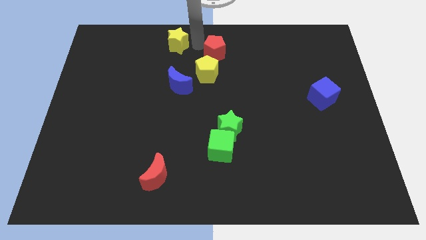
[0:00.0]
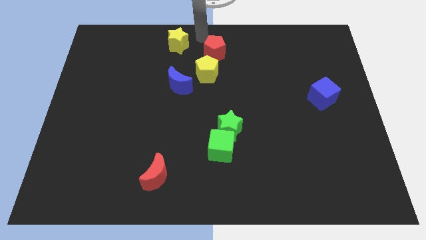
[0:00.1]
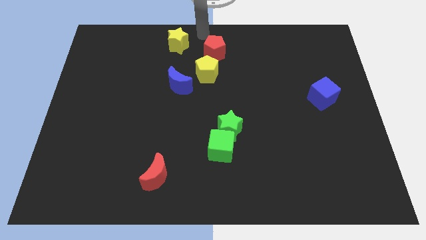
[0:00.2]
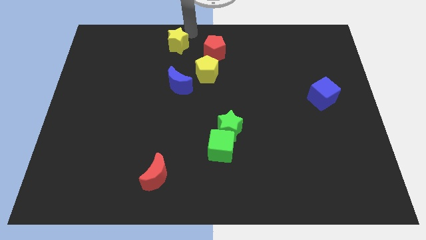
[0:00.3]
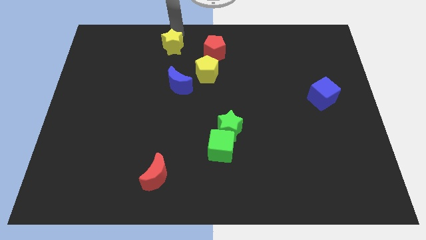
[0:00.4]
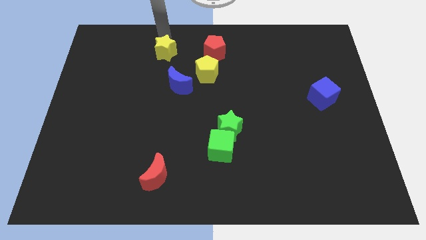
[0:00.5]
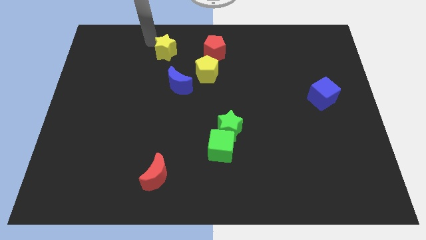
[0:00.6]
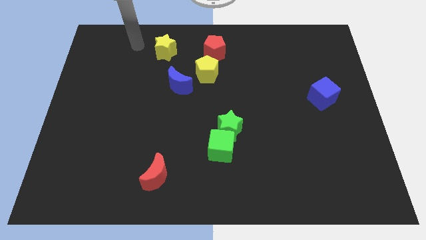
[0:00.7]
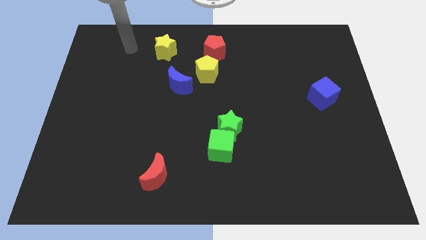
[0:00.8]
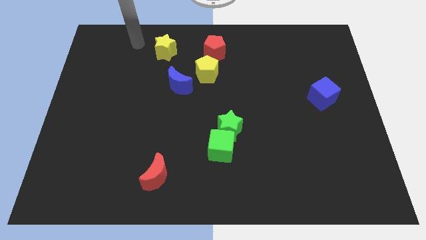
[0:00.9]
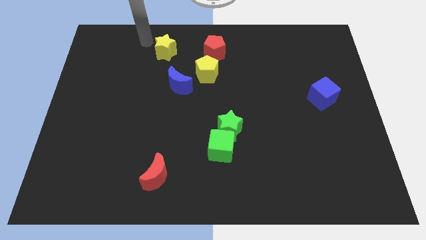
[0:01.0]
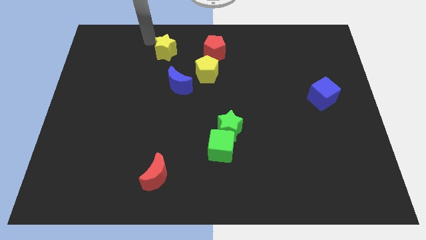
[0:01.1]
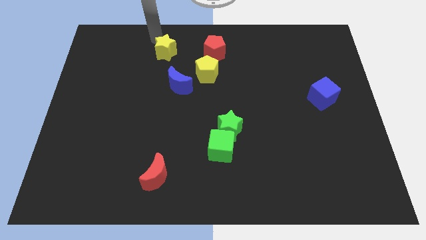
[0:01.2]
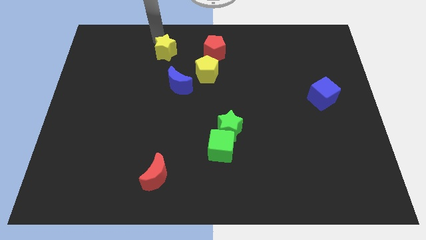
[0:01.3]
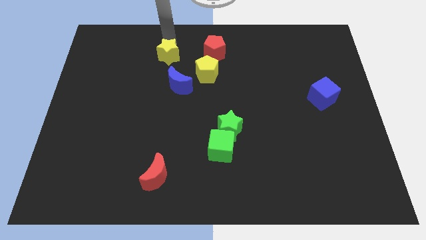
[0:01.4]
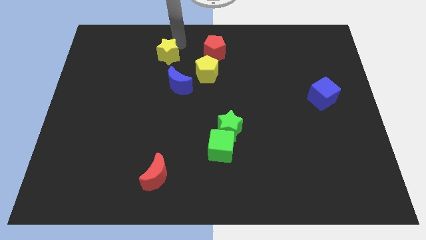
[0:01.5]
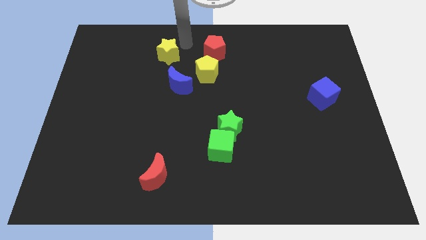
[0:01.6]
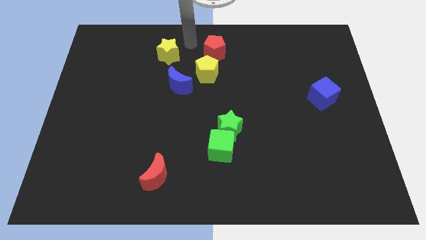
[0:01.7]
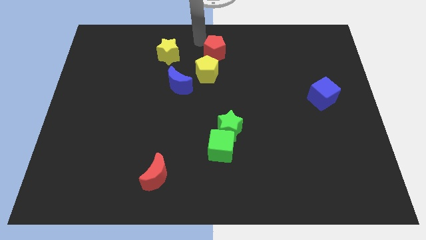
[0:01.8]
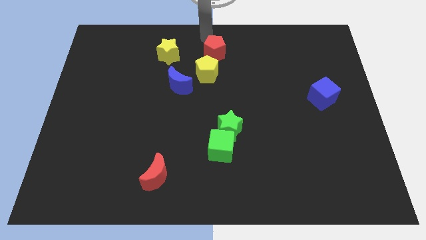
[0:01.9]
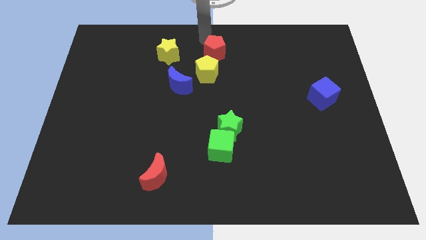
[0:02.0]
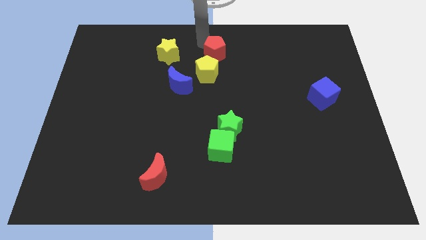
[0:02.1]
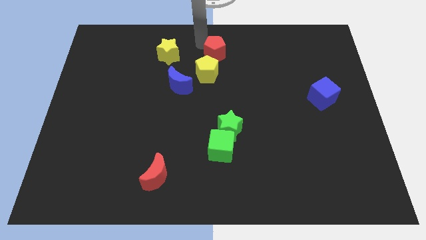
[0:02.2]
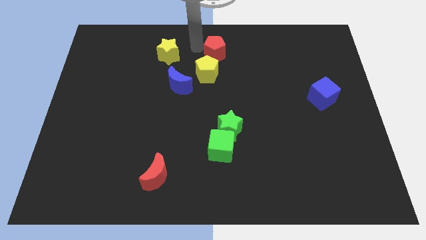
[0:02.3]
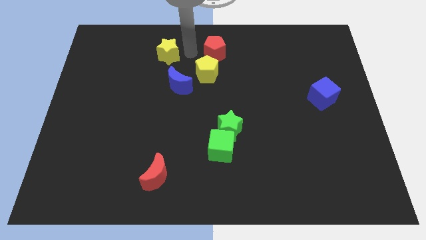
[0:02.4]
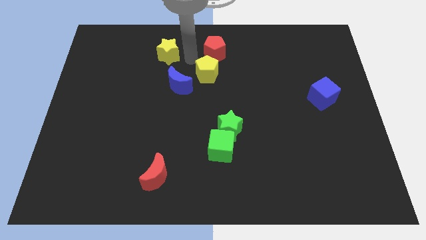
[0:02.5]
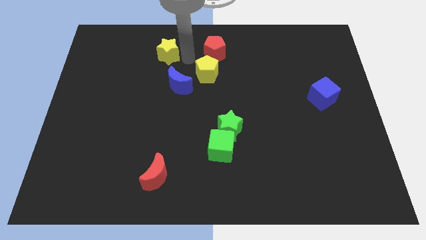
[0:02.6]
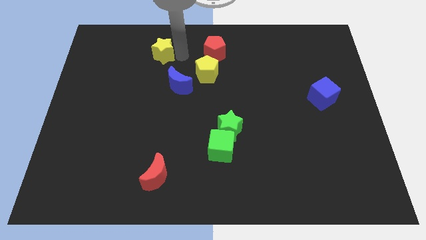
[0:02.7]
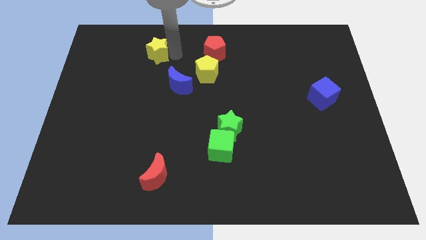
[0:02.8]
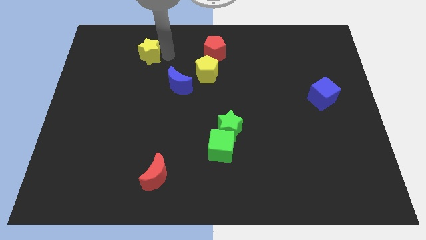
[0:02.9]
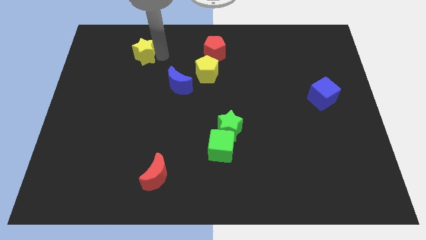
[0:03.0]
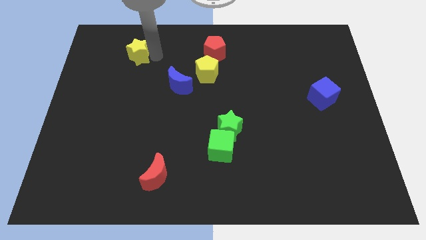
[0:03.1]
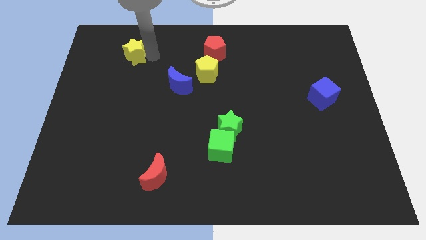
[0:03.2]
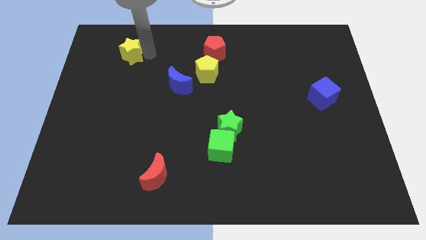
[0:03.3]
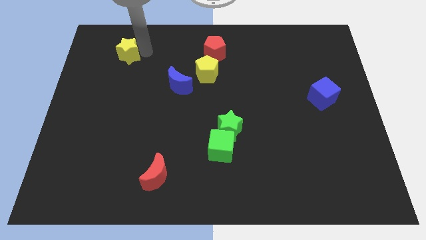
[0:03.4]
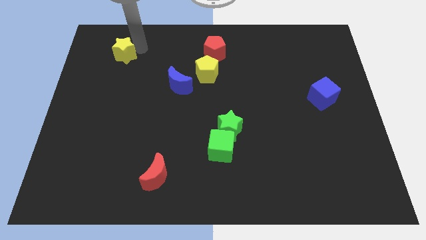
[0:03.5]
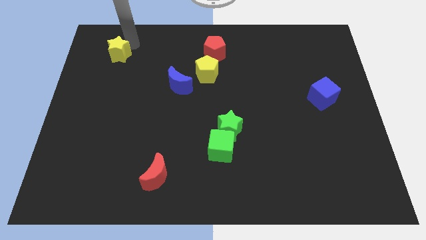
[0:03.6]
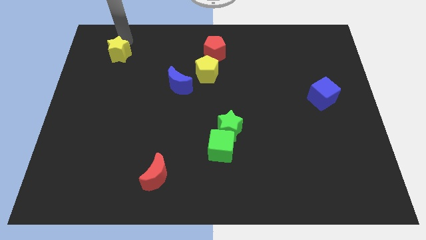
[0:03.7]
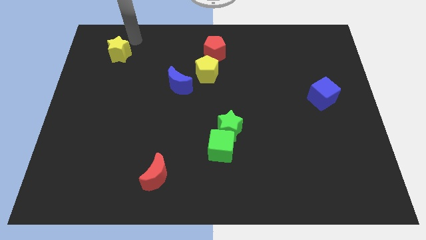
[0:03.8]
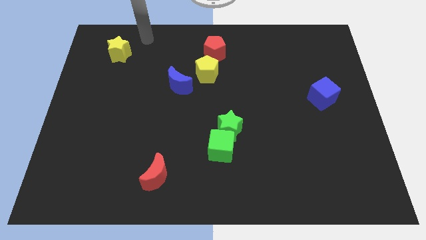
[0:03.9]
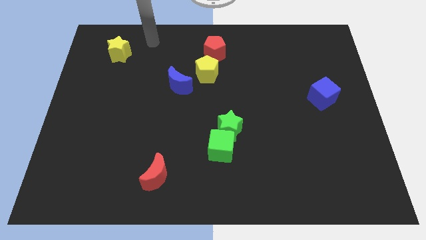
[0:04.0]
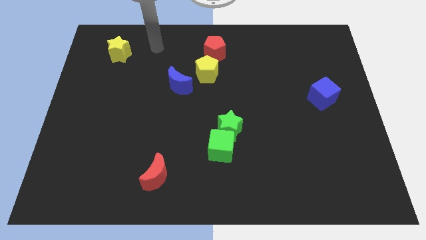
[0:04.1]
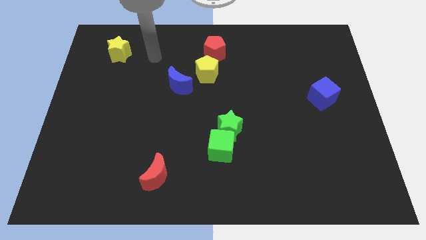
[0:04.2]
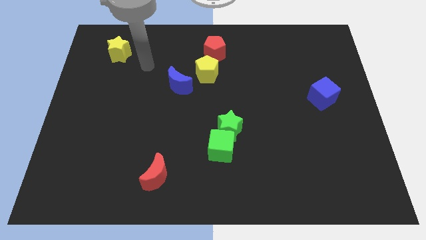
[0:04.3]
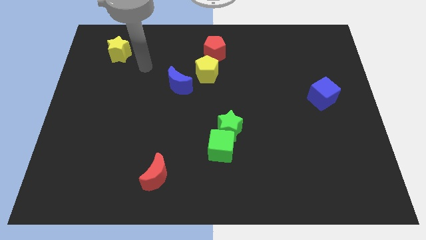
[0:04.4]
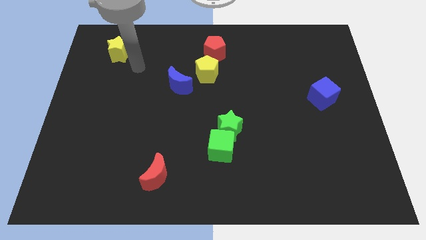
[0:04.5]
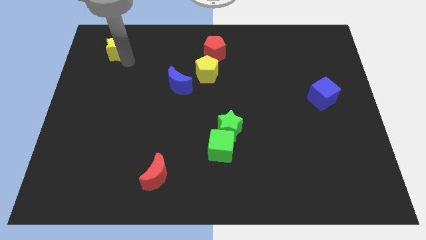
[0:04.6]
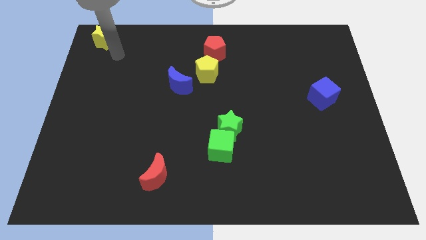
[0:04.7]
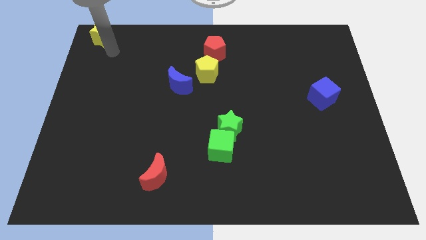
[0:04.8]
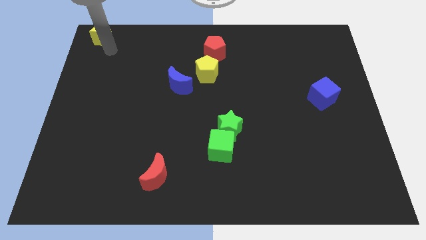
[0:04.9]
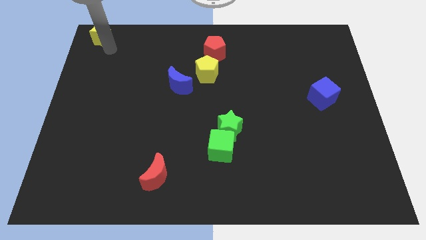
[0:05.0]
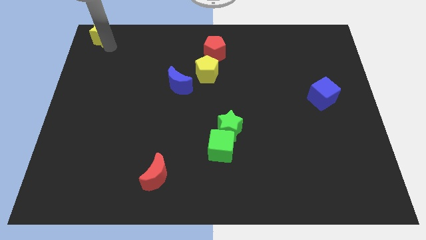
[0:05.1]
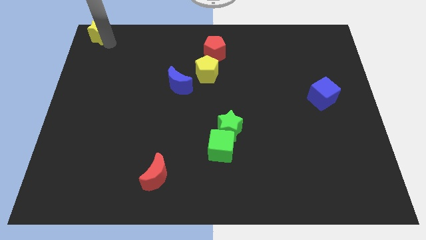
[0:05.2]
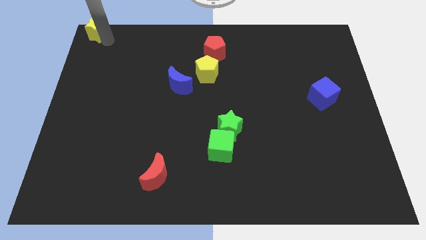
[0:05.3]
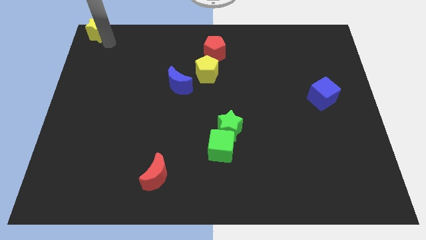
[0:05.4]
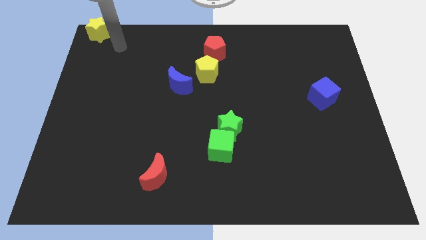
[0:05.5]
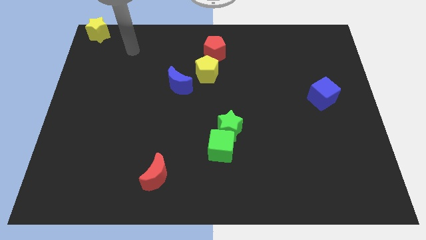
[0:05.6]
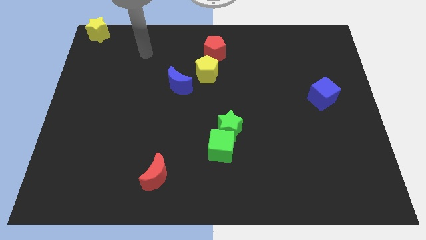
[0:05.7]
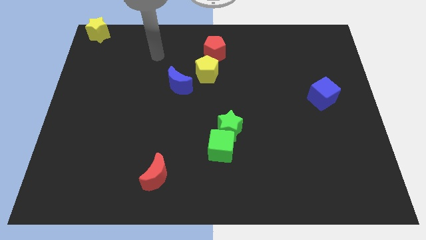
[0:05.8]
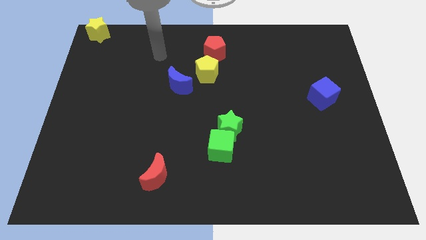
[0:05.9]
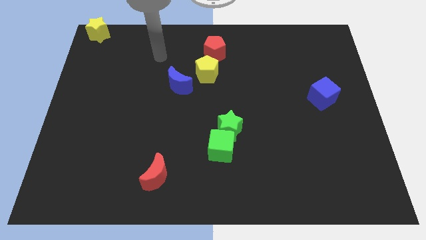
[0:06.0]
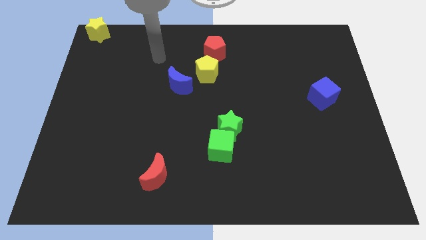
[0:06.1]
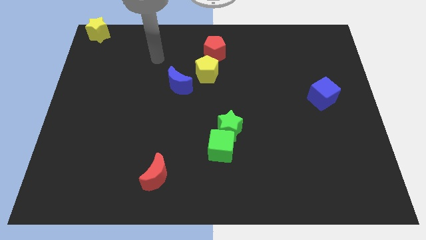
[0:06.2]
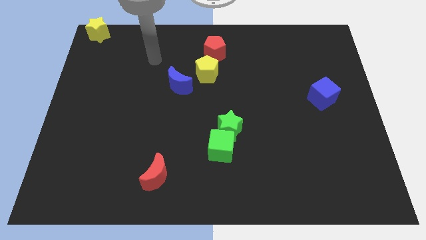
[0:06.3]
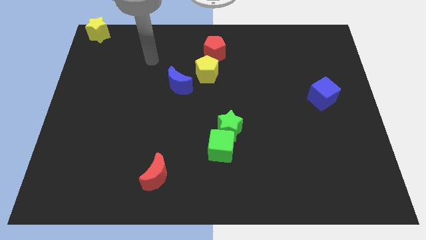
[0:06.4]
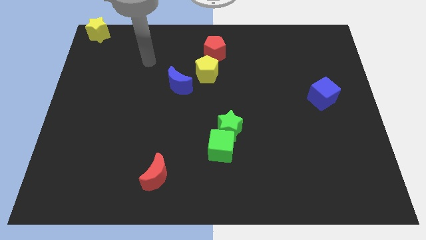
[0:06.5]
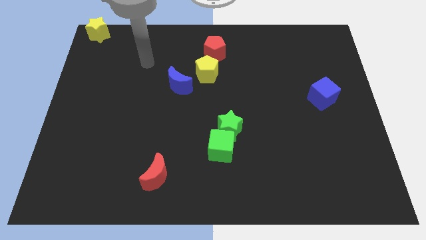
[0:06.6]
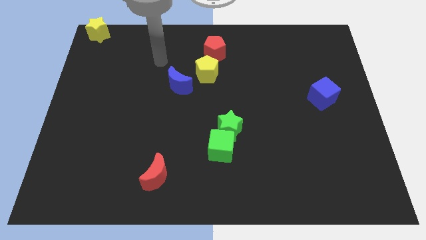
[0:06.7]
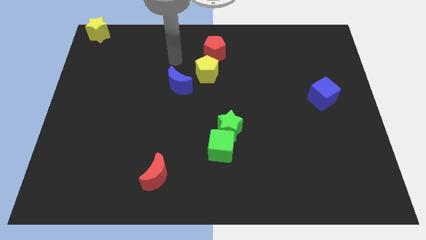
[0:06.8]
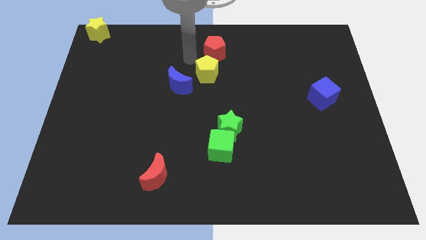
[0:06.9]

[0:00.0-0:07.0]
place the yellow star at the top left corner of the board

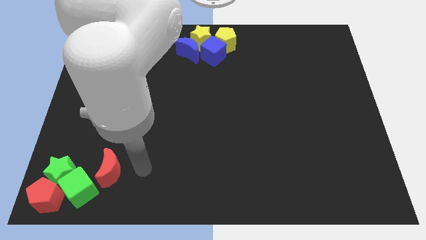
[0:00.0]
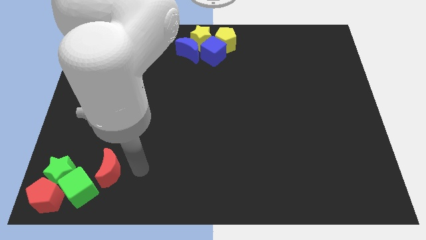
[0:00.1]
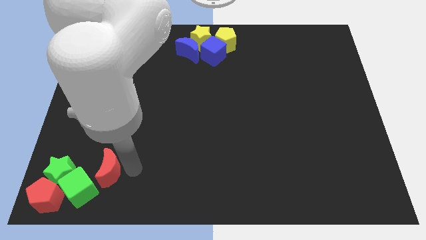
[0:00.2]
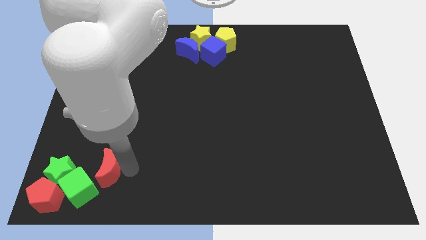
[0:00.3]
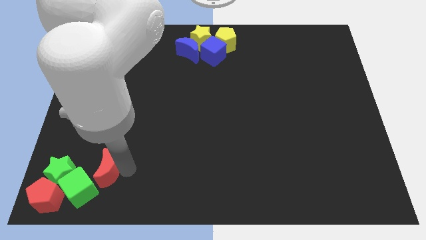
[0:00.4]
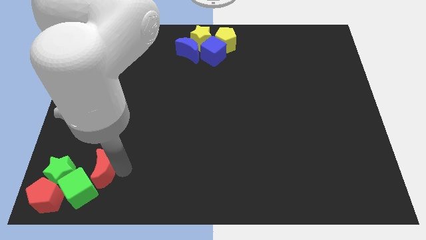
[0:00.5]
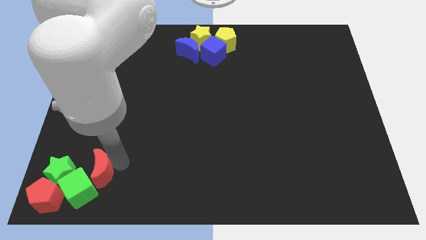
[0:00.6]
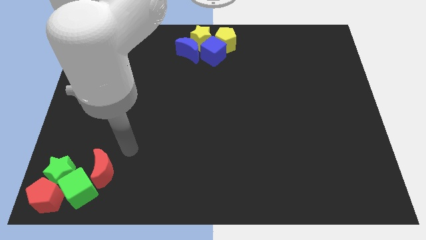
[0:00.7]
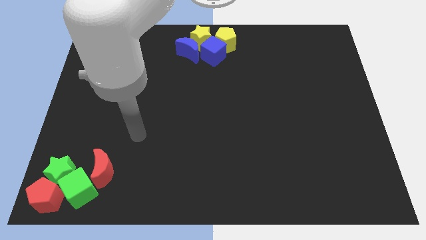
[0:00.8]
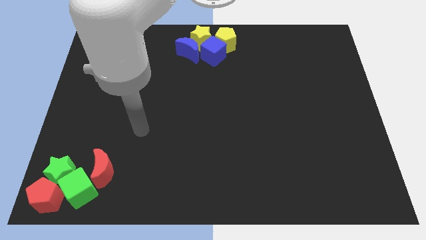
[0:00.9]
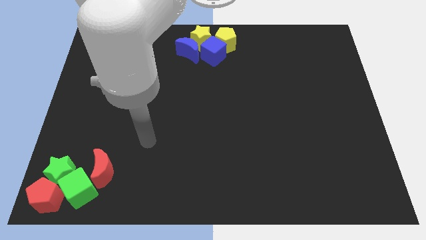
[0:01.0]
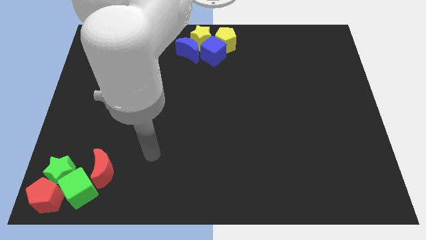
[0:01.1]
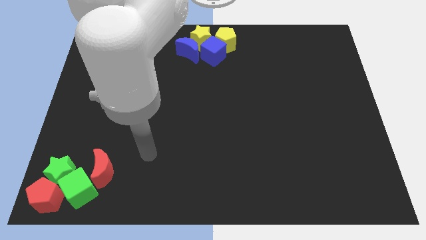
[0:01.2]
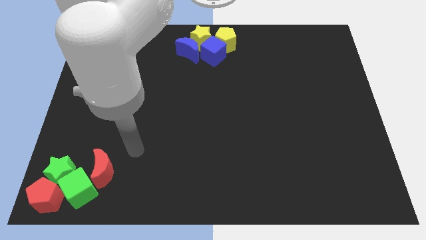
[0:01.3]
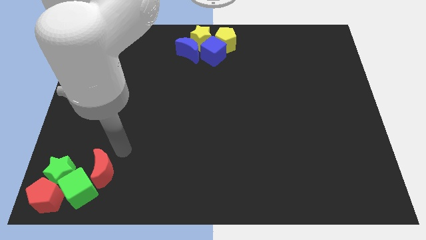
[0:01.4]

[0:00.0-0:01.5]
move the red crescent to the right side of green cube

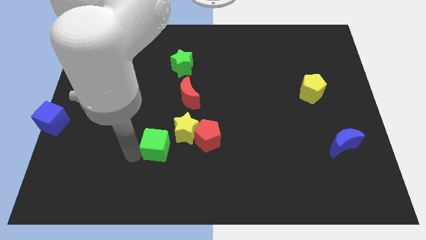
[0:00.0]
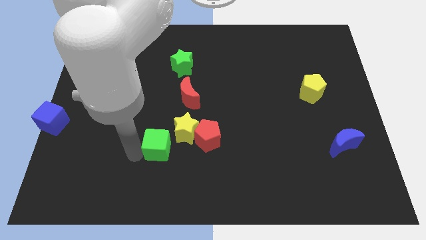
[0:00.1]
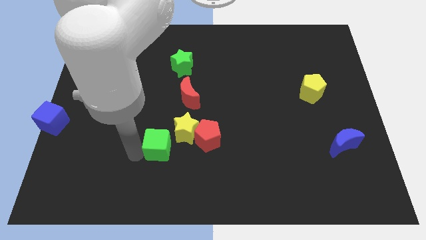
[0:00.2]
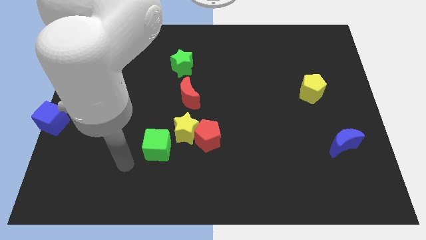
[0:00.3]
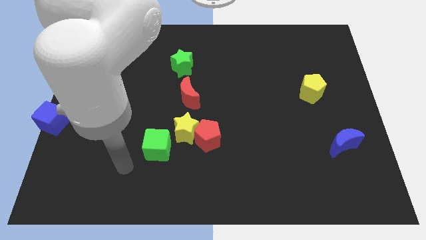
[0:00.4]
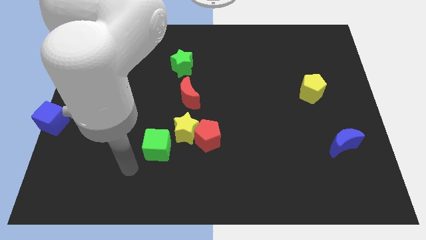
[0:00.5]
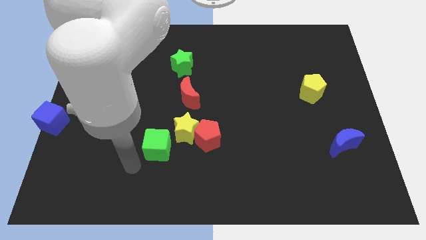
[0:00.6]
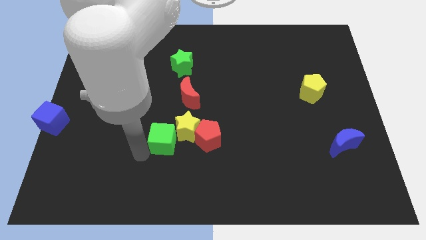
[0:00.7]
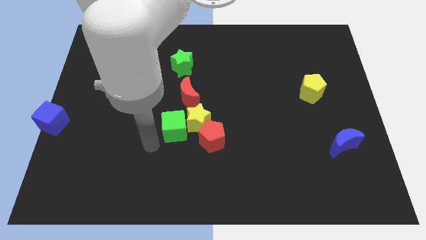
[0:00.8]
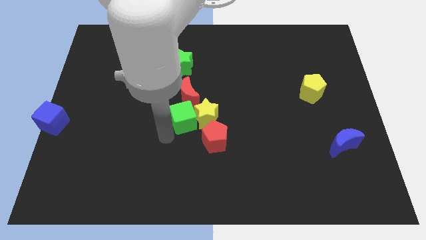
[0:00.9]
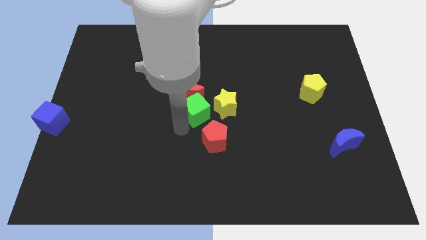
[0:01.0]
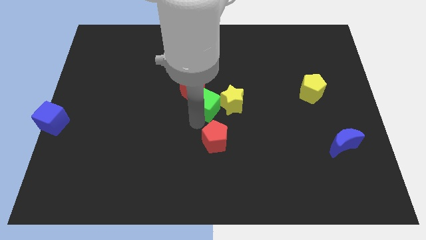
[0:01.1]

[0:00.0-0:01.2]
put green cube in between red moon and red pentagon
